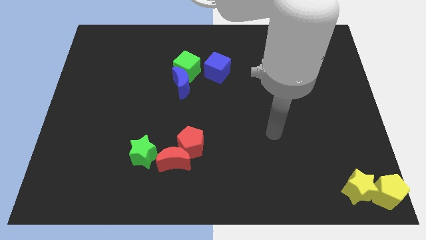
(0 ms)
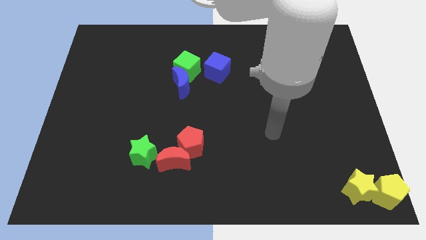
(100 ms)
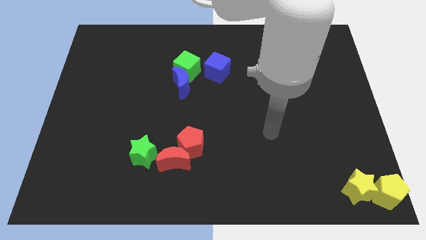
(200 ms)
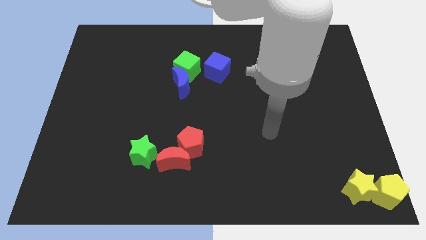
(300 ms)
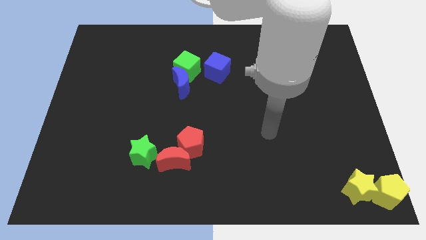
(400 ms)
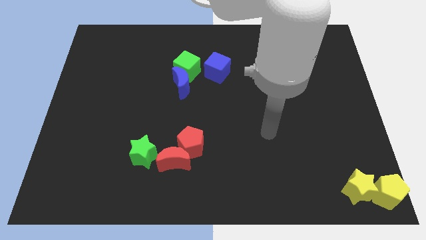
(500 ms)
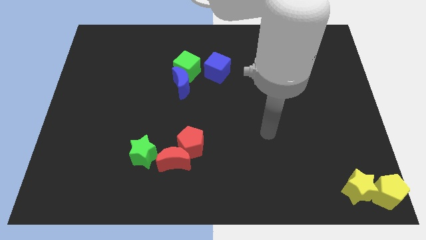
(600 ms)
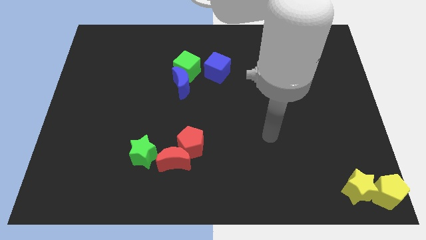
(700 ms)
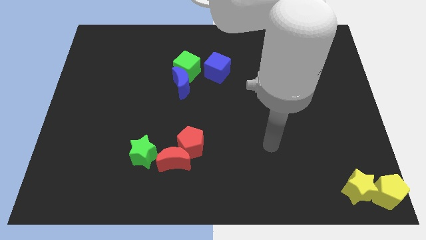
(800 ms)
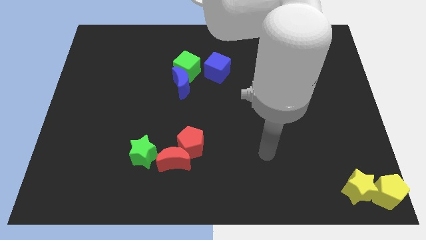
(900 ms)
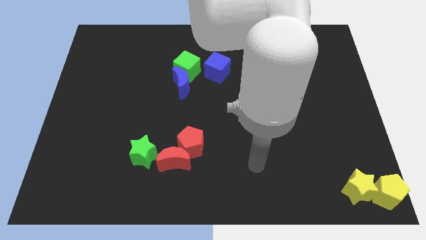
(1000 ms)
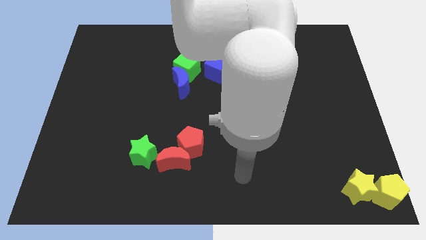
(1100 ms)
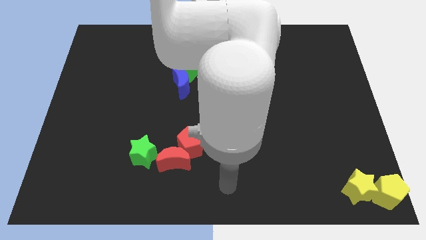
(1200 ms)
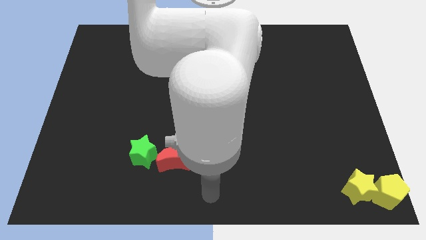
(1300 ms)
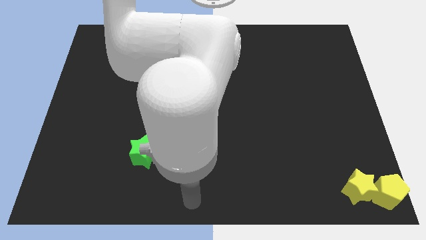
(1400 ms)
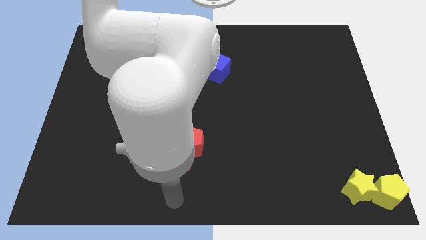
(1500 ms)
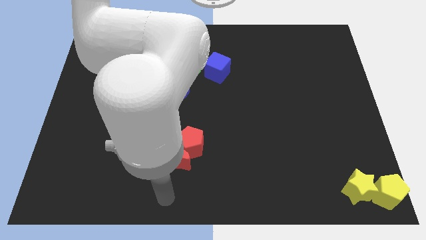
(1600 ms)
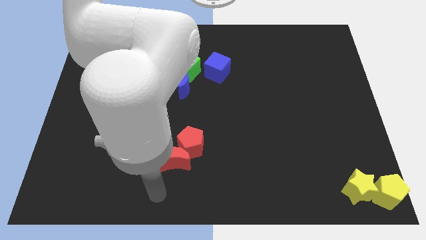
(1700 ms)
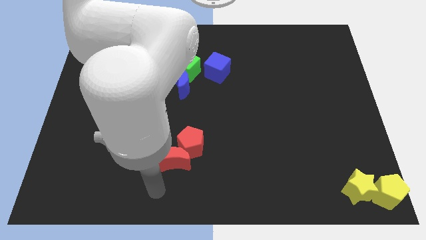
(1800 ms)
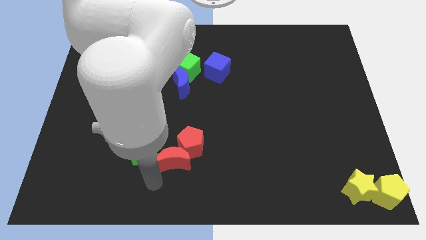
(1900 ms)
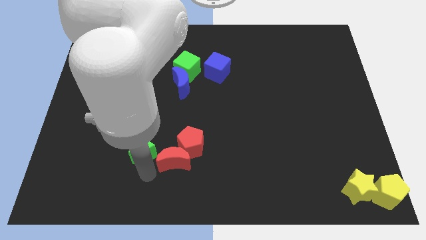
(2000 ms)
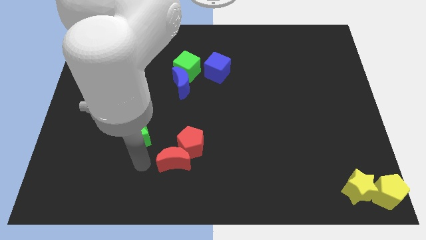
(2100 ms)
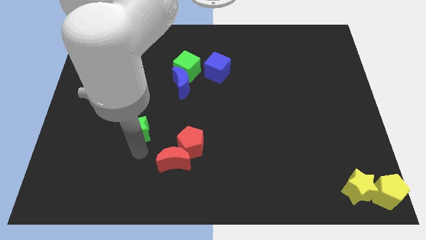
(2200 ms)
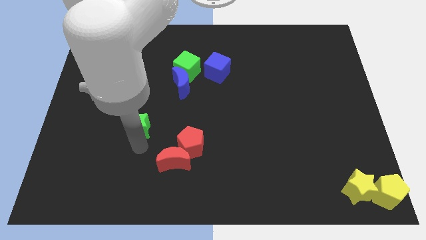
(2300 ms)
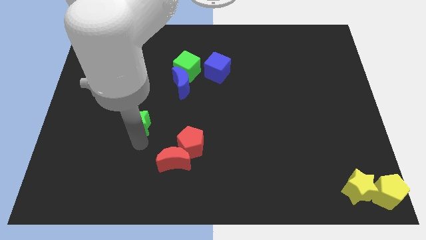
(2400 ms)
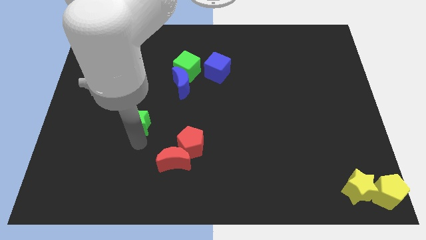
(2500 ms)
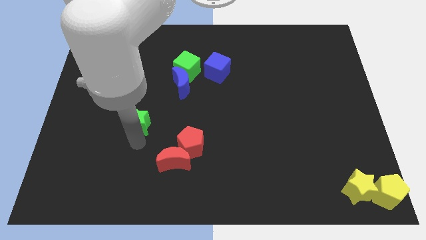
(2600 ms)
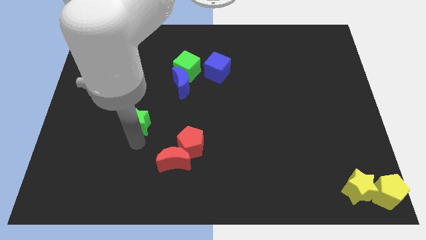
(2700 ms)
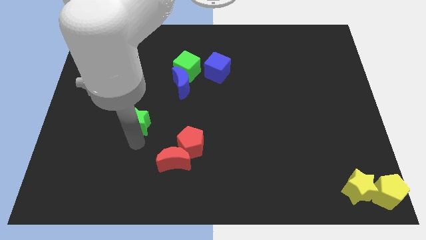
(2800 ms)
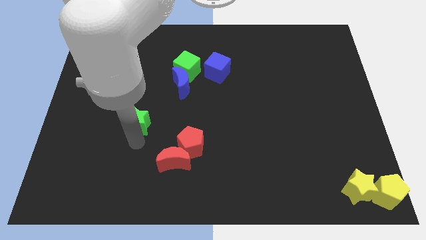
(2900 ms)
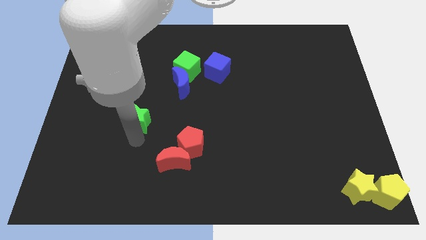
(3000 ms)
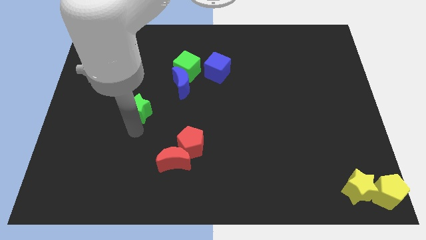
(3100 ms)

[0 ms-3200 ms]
drag the green star diagonally top left to the red moon

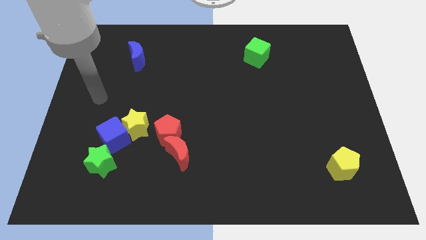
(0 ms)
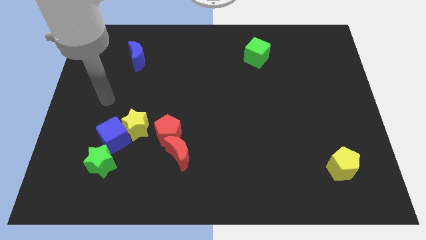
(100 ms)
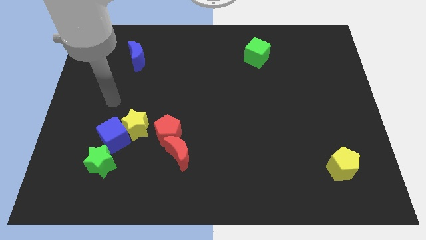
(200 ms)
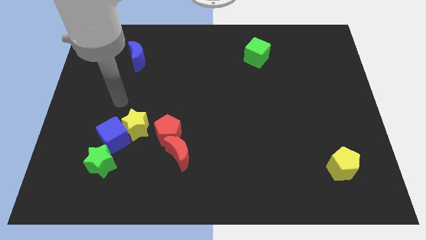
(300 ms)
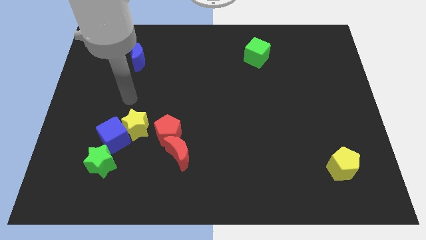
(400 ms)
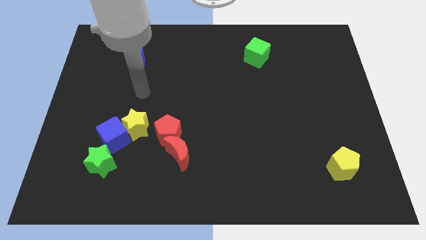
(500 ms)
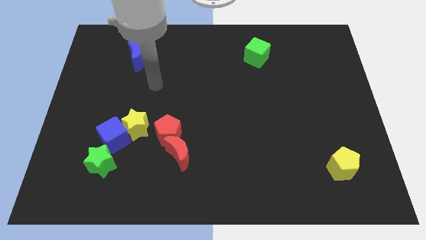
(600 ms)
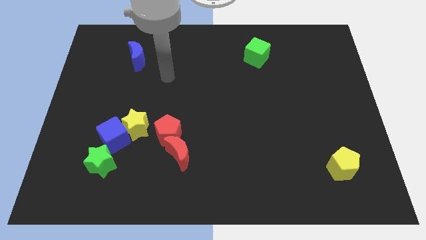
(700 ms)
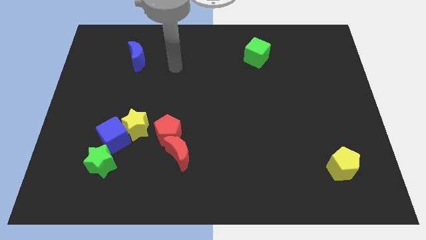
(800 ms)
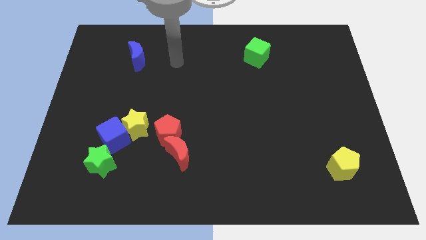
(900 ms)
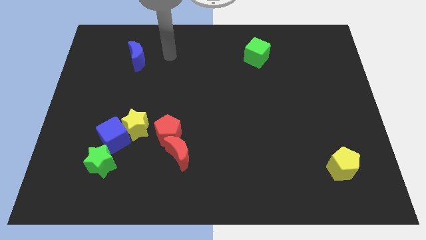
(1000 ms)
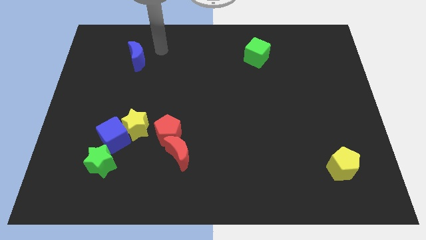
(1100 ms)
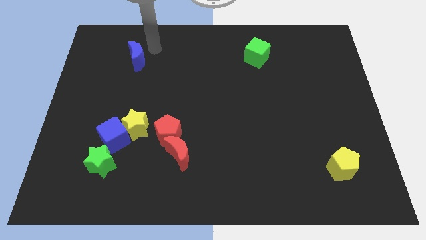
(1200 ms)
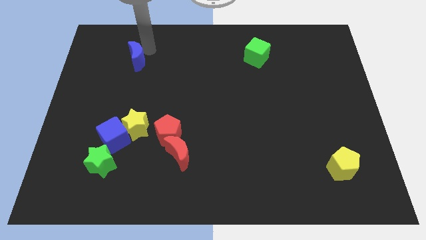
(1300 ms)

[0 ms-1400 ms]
place the arm at the top right side of the blue moon

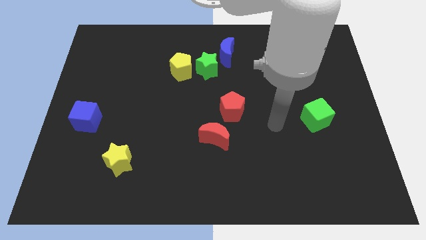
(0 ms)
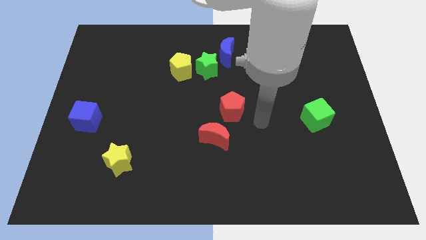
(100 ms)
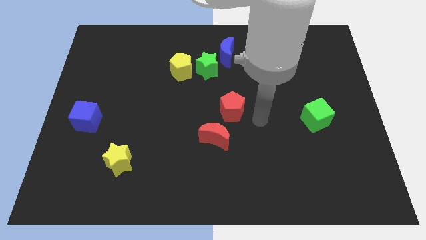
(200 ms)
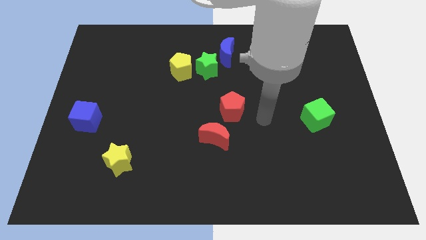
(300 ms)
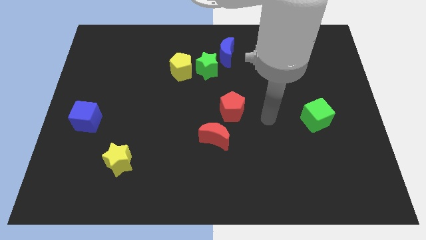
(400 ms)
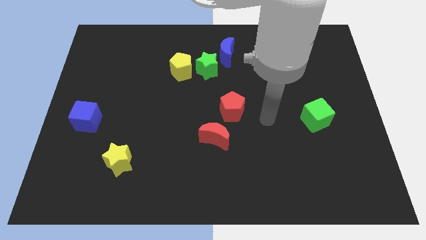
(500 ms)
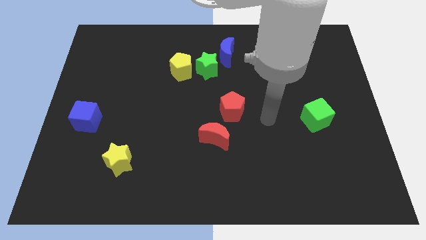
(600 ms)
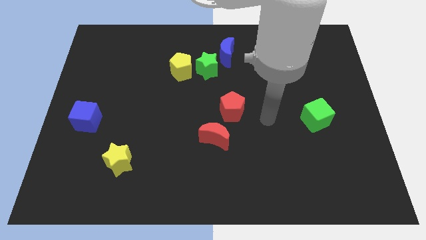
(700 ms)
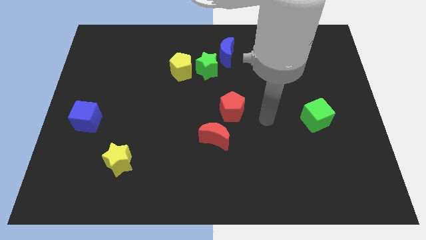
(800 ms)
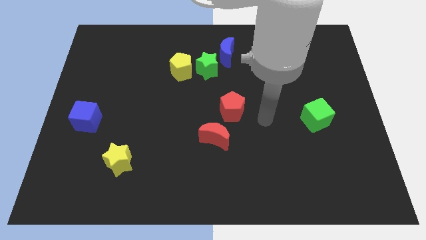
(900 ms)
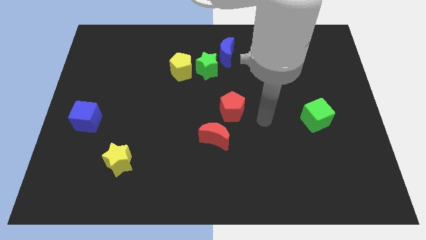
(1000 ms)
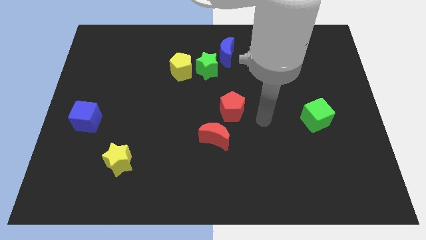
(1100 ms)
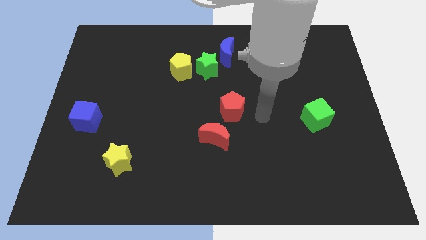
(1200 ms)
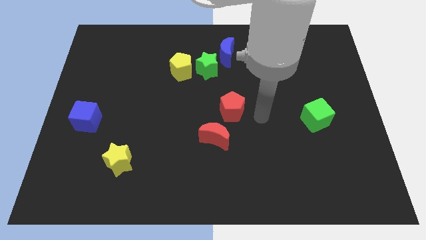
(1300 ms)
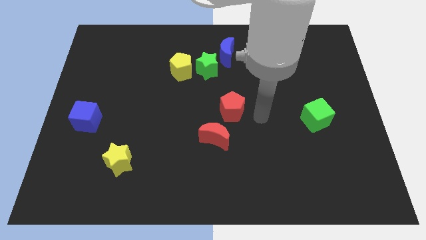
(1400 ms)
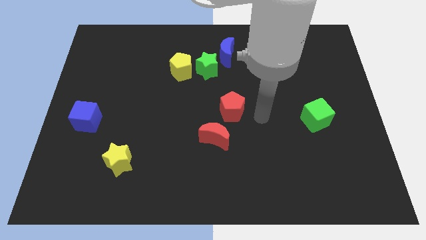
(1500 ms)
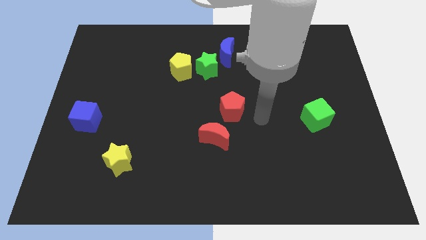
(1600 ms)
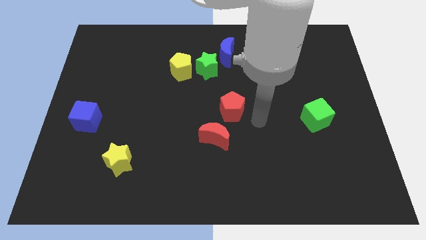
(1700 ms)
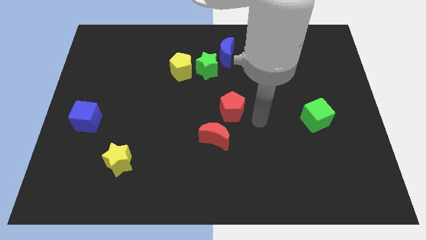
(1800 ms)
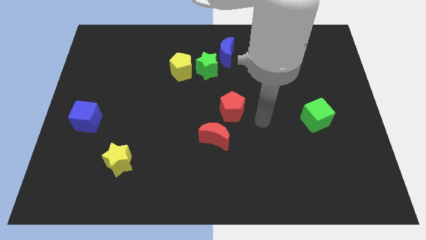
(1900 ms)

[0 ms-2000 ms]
point your arm to the bottom right side of the red pentagon

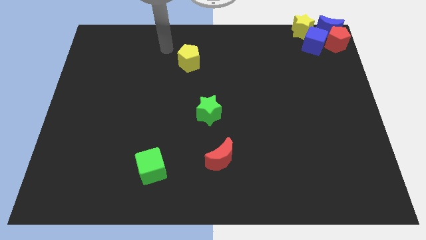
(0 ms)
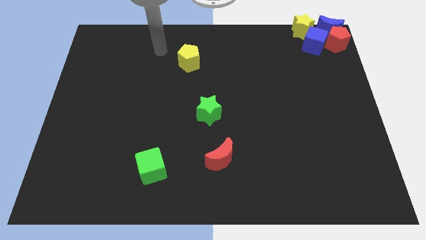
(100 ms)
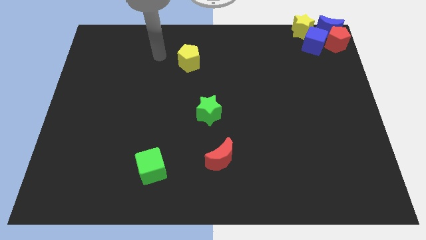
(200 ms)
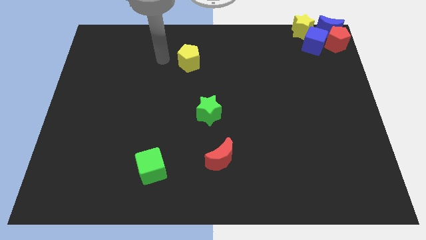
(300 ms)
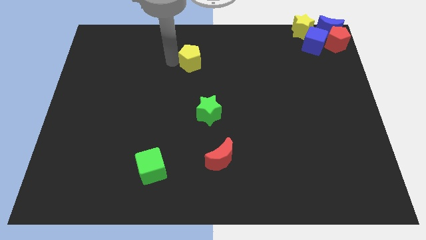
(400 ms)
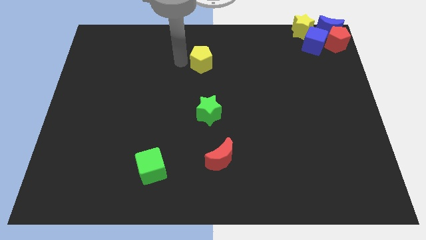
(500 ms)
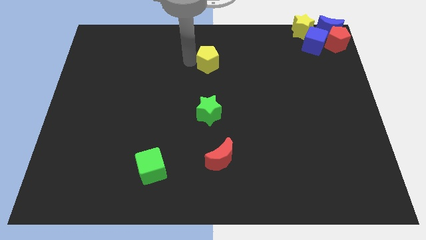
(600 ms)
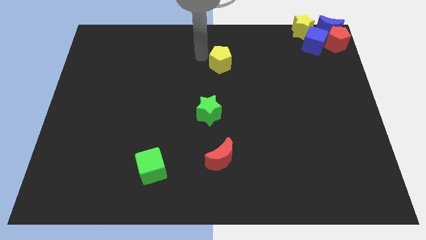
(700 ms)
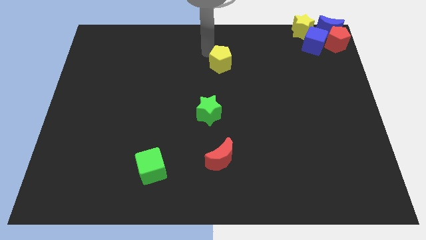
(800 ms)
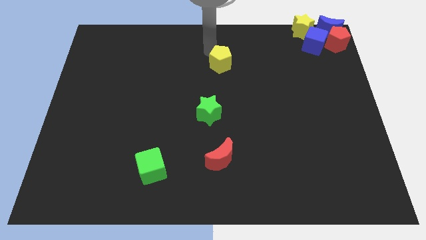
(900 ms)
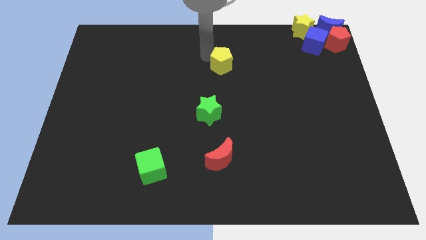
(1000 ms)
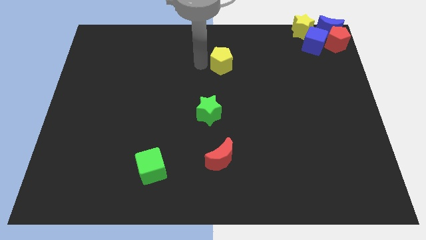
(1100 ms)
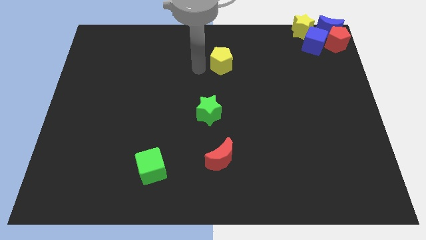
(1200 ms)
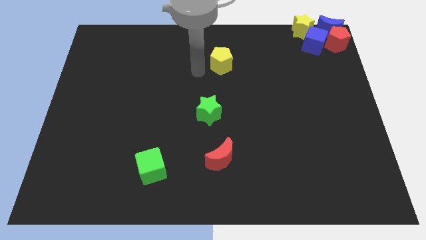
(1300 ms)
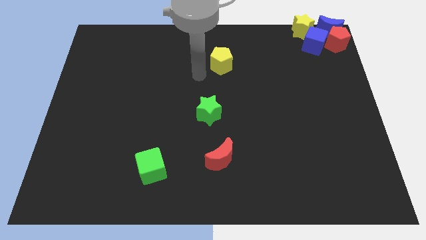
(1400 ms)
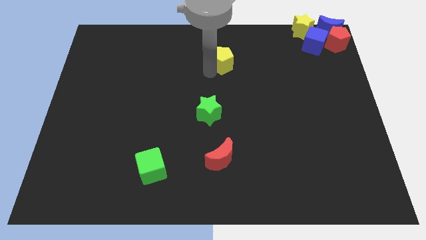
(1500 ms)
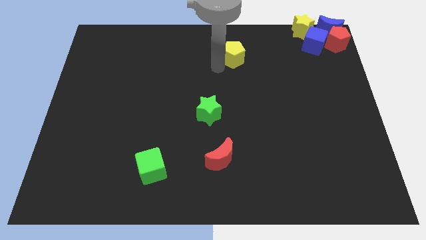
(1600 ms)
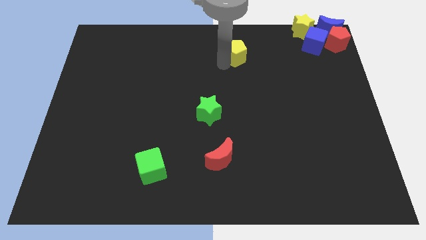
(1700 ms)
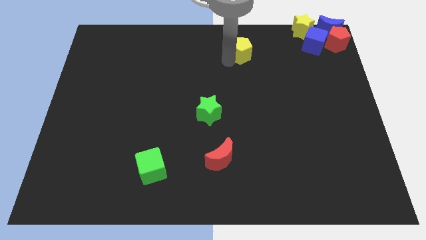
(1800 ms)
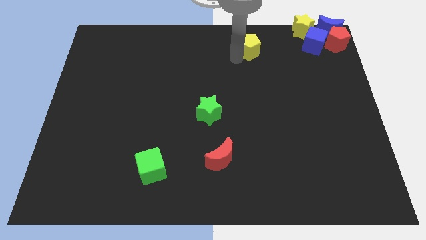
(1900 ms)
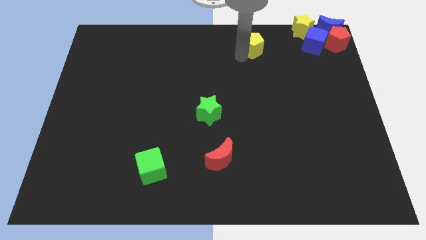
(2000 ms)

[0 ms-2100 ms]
move yellow pentagon towards left of the yellow star

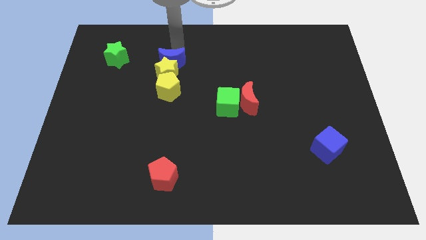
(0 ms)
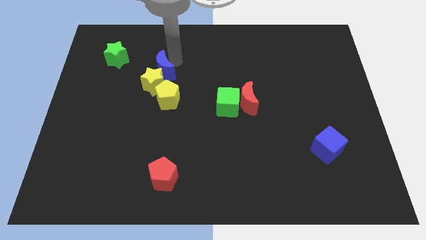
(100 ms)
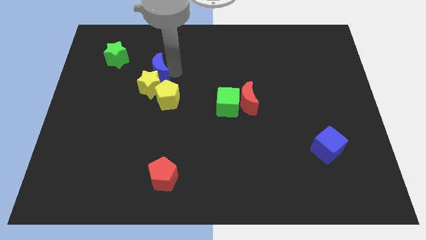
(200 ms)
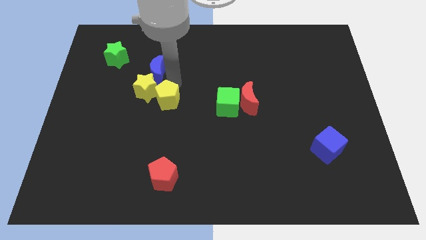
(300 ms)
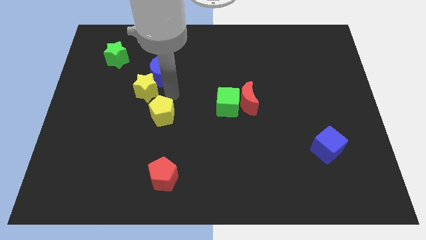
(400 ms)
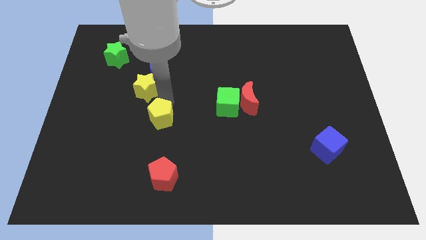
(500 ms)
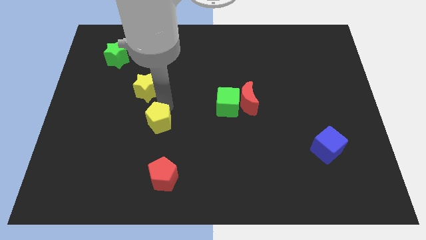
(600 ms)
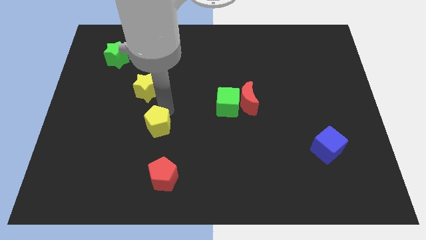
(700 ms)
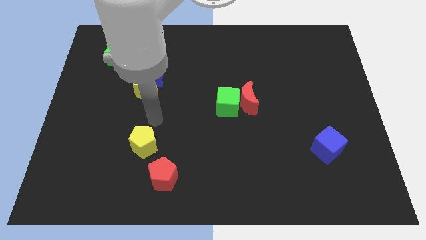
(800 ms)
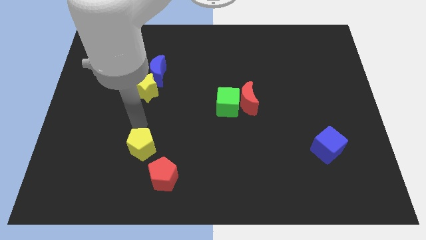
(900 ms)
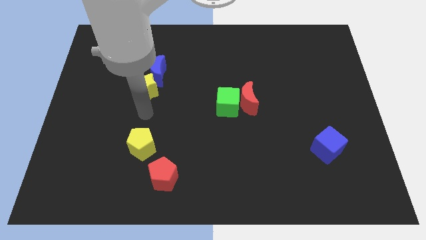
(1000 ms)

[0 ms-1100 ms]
push the yellow pentagon above the red pentagon
